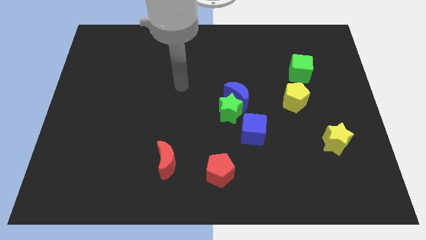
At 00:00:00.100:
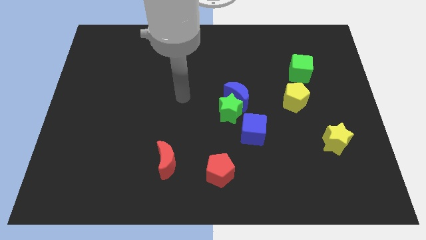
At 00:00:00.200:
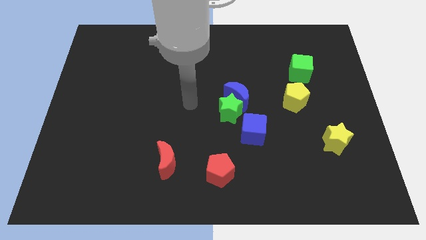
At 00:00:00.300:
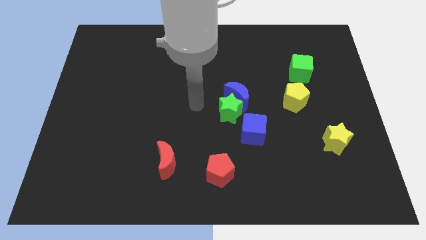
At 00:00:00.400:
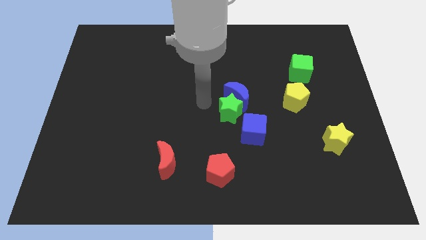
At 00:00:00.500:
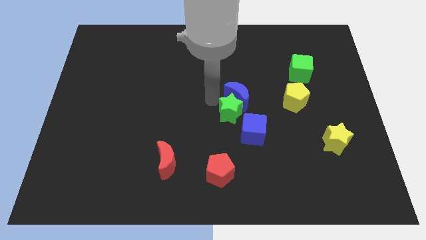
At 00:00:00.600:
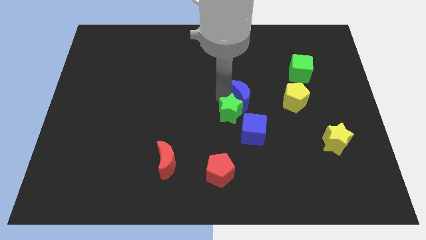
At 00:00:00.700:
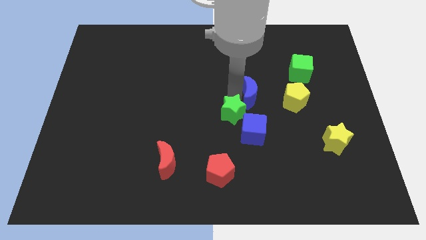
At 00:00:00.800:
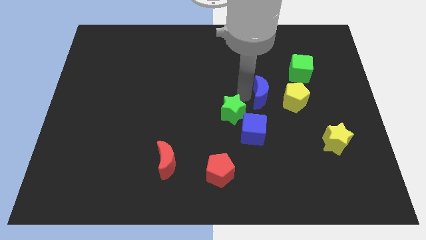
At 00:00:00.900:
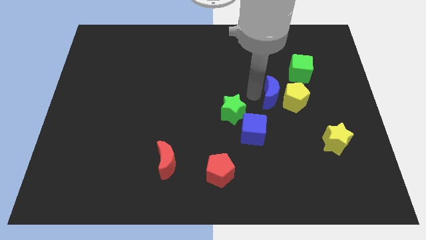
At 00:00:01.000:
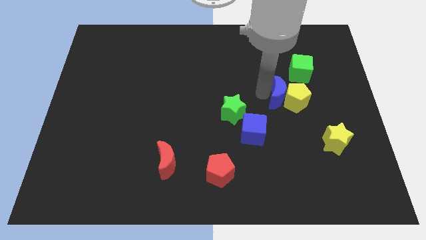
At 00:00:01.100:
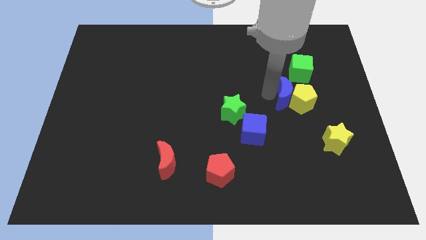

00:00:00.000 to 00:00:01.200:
push the blue moon towards the yellow pentagon

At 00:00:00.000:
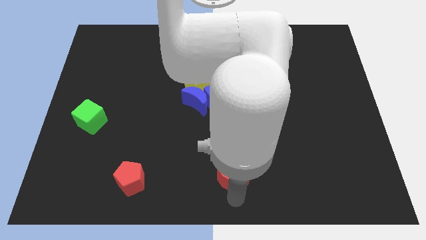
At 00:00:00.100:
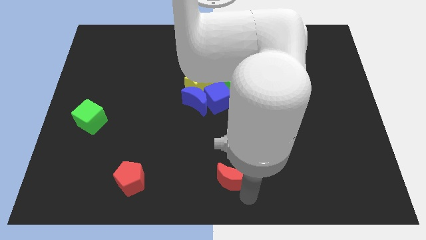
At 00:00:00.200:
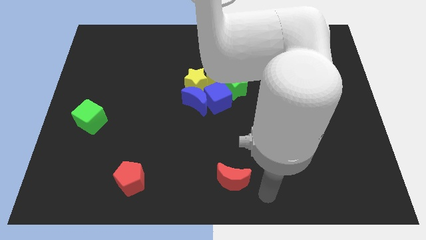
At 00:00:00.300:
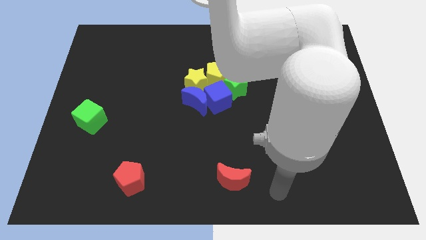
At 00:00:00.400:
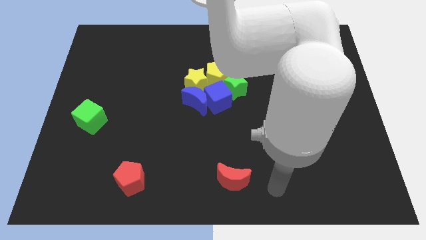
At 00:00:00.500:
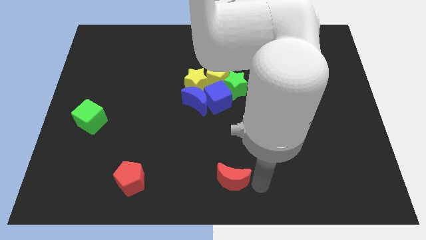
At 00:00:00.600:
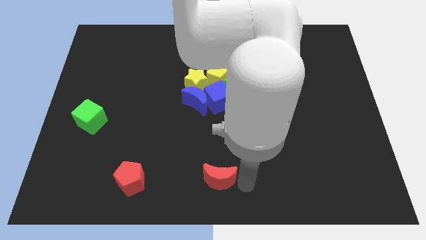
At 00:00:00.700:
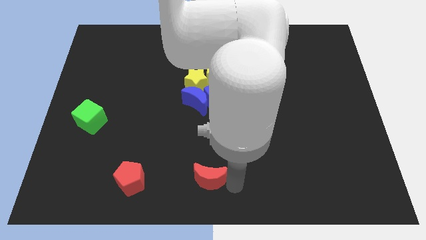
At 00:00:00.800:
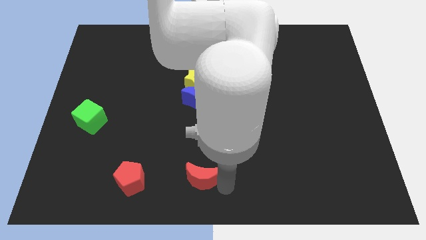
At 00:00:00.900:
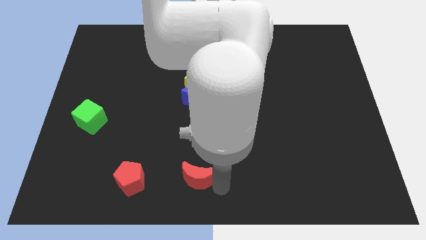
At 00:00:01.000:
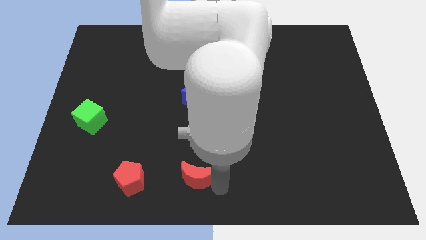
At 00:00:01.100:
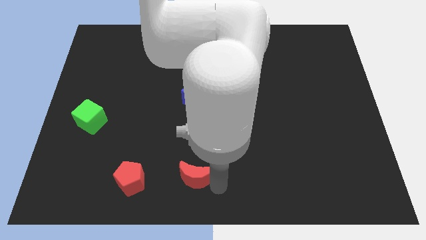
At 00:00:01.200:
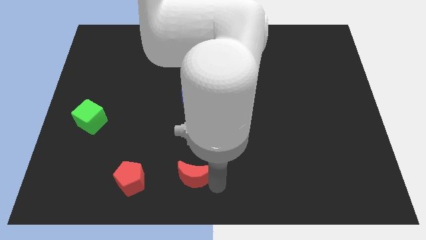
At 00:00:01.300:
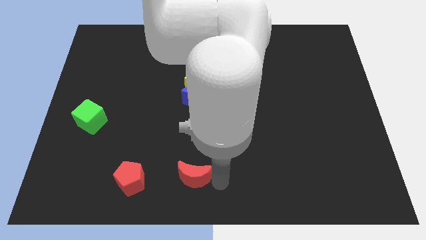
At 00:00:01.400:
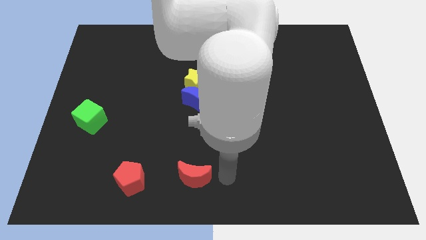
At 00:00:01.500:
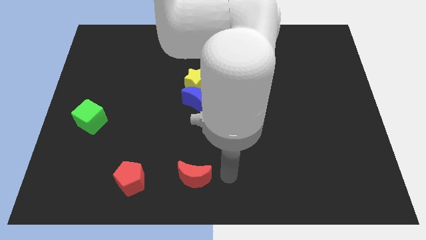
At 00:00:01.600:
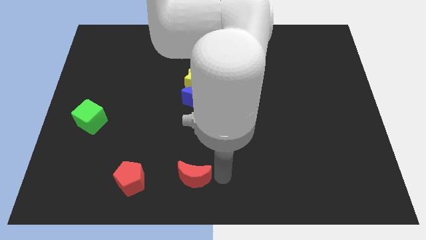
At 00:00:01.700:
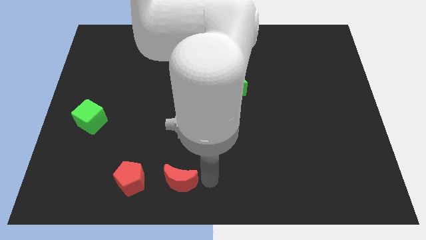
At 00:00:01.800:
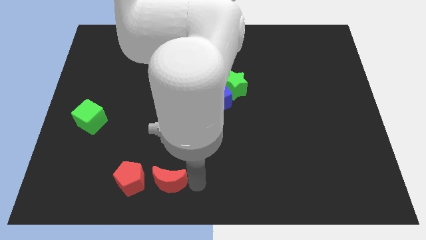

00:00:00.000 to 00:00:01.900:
push the red moon to the right of the red pentagon

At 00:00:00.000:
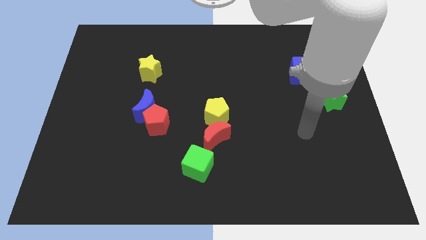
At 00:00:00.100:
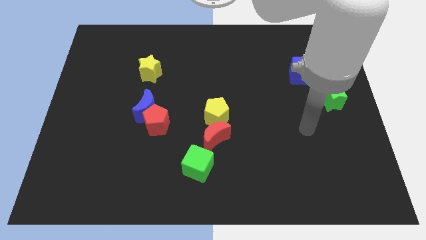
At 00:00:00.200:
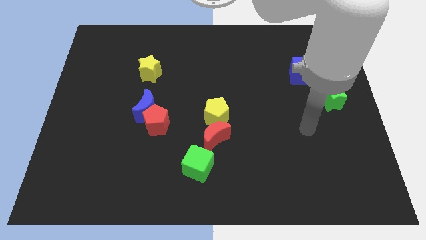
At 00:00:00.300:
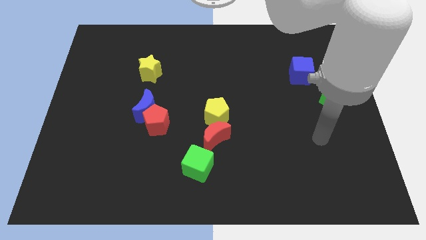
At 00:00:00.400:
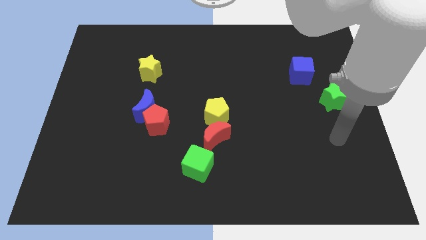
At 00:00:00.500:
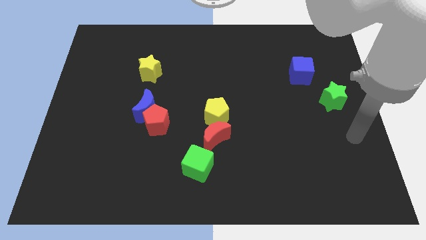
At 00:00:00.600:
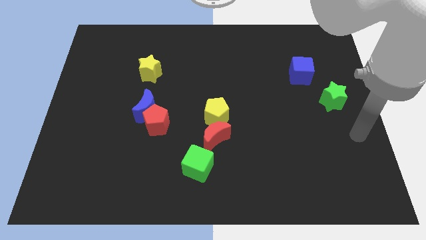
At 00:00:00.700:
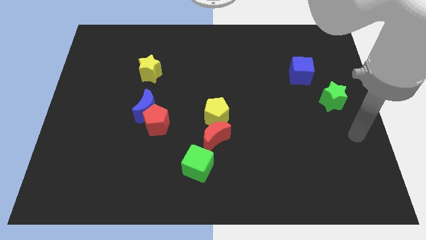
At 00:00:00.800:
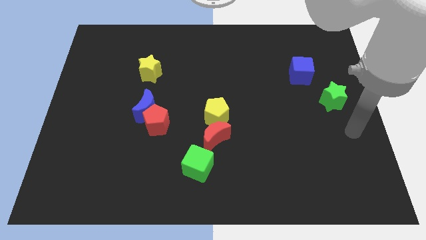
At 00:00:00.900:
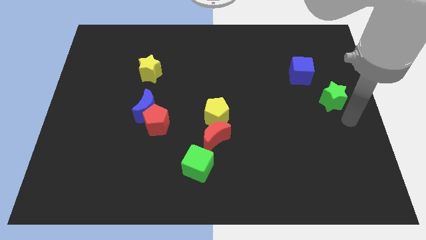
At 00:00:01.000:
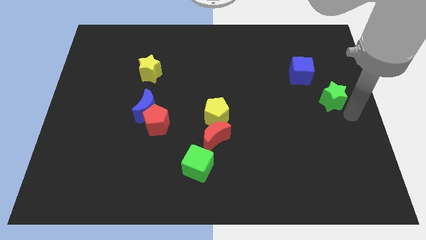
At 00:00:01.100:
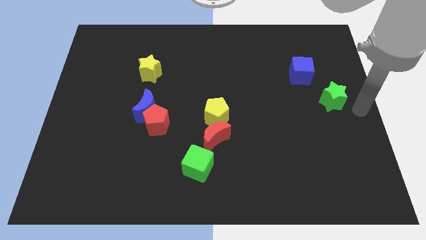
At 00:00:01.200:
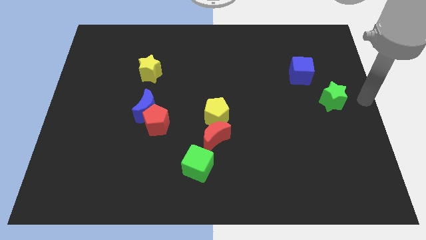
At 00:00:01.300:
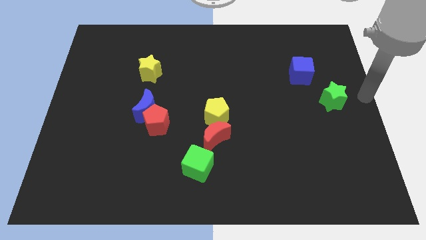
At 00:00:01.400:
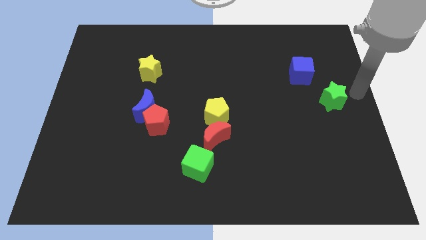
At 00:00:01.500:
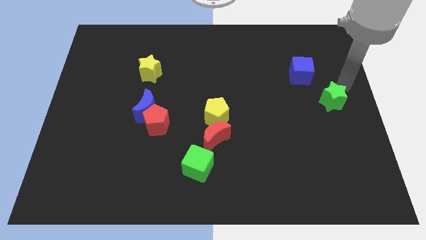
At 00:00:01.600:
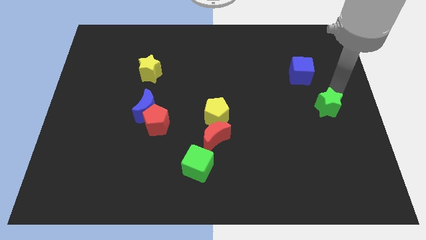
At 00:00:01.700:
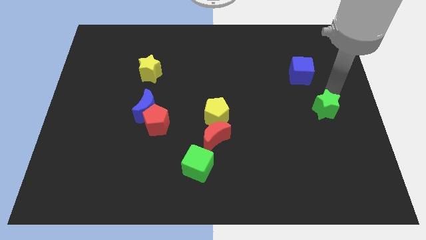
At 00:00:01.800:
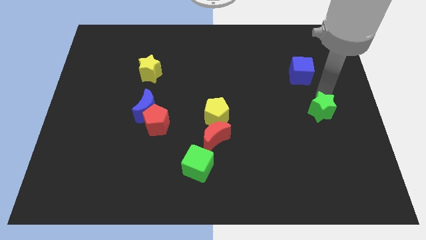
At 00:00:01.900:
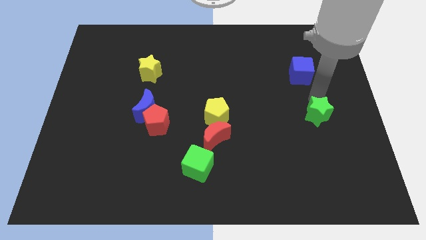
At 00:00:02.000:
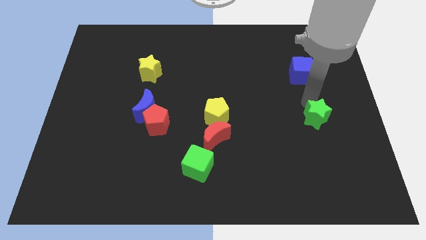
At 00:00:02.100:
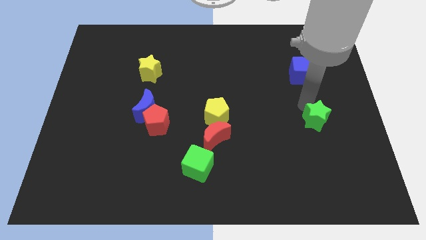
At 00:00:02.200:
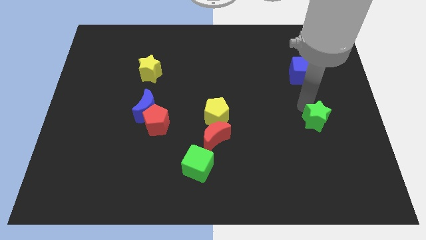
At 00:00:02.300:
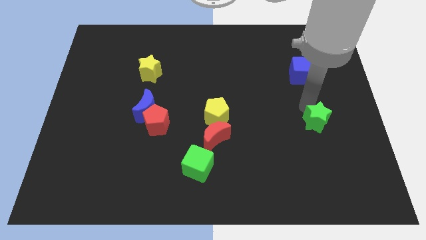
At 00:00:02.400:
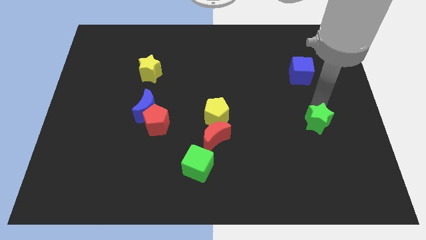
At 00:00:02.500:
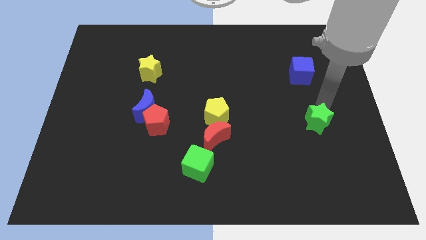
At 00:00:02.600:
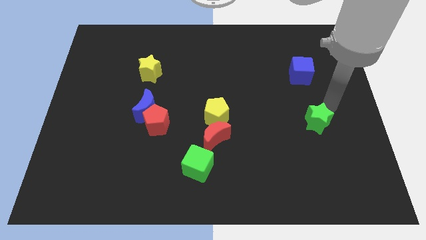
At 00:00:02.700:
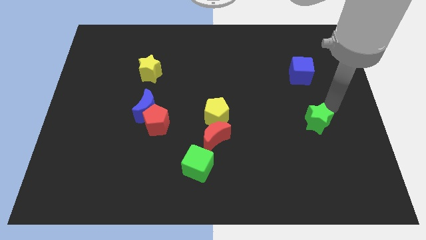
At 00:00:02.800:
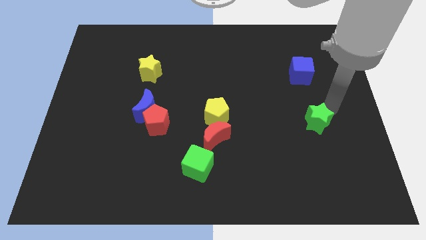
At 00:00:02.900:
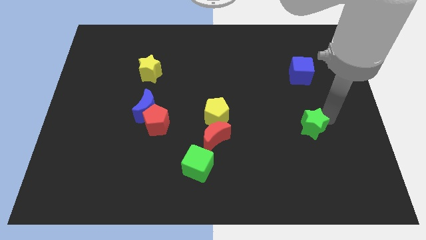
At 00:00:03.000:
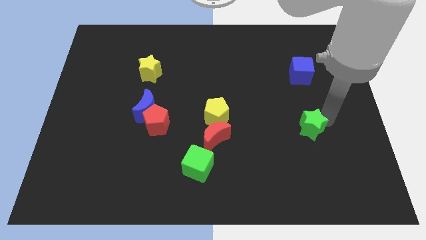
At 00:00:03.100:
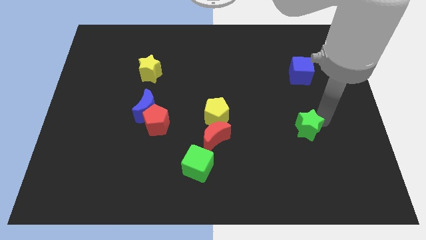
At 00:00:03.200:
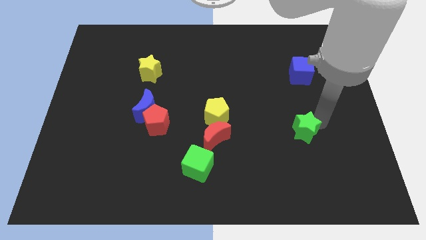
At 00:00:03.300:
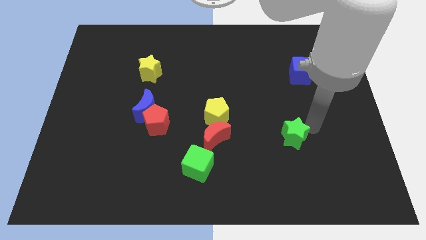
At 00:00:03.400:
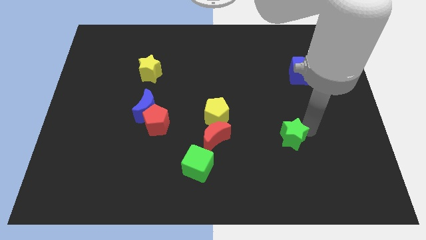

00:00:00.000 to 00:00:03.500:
move the green star parallel to red moon

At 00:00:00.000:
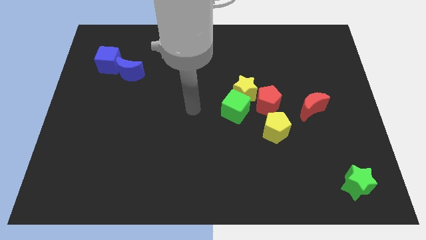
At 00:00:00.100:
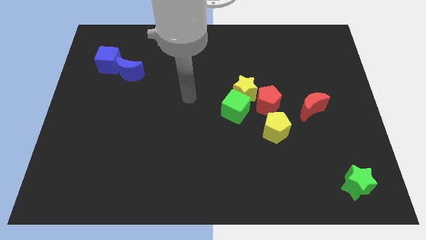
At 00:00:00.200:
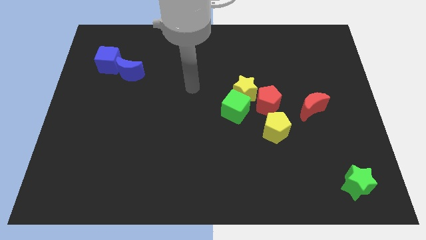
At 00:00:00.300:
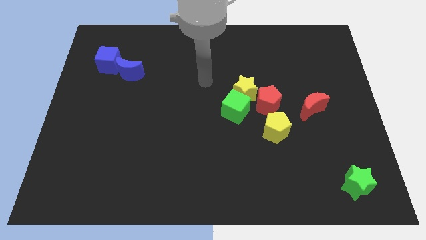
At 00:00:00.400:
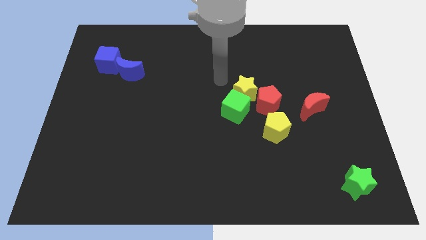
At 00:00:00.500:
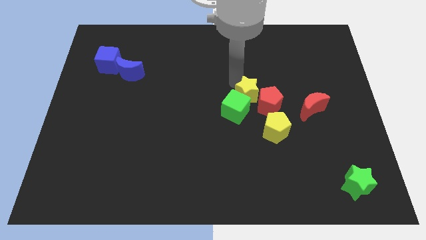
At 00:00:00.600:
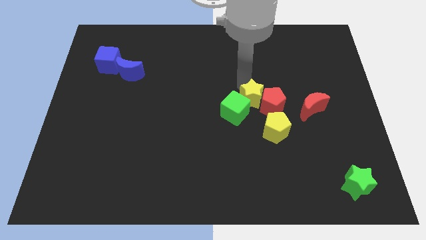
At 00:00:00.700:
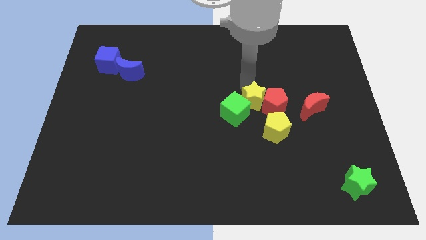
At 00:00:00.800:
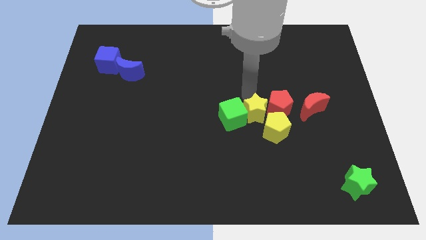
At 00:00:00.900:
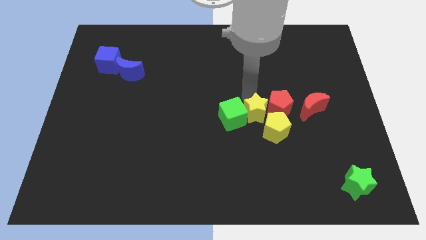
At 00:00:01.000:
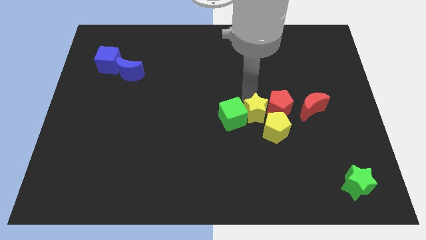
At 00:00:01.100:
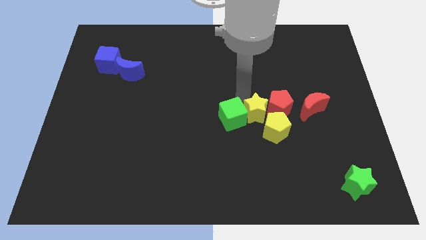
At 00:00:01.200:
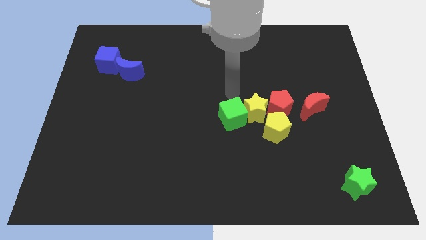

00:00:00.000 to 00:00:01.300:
place the yellow star in between the green cube and red pentagon

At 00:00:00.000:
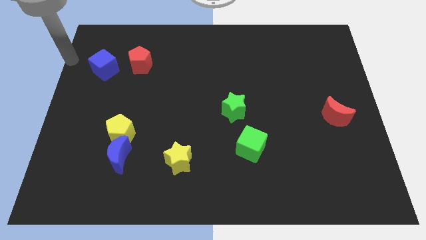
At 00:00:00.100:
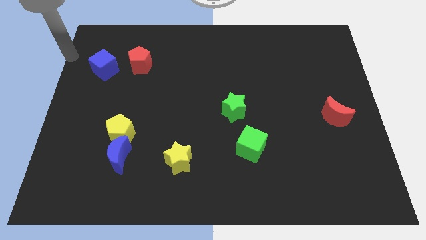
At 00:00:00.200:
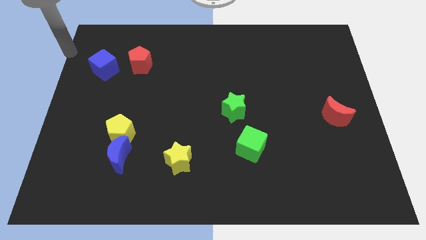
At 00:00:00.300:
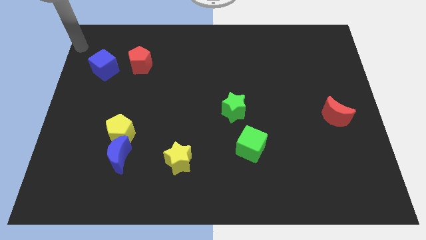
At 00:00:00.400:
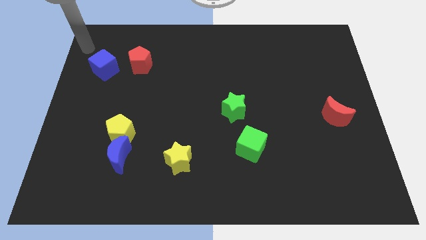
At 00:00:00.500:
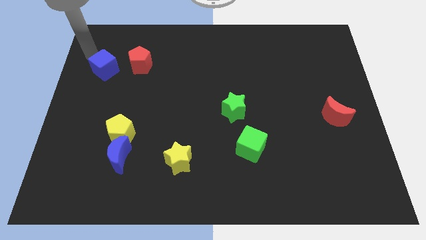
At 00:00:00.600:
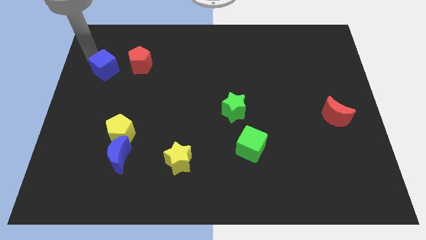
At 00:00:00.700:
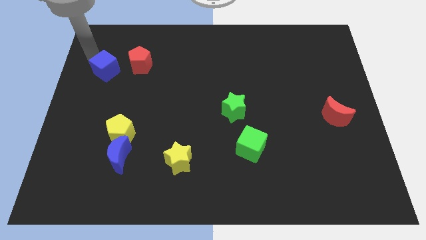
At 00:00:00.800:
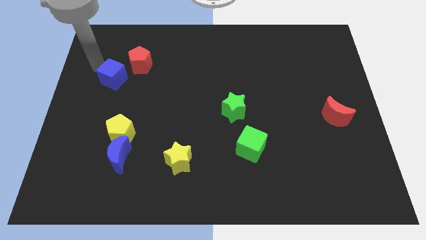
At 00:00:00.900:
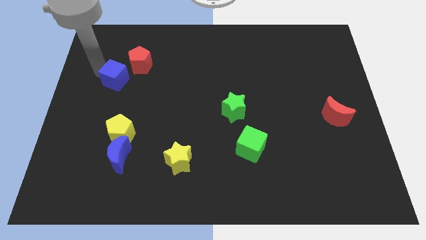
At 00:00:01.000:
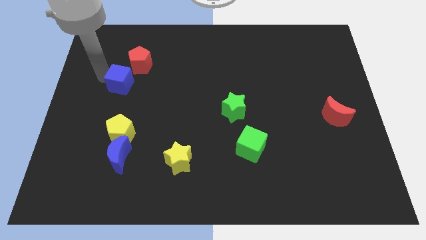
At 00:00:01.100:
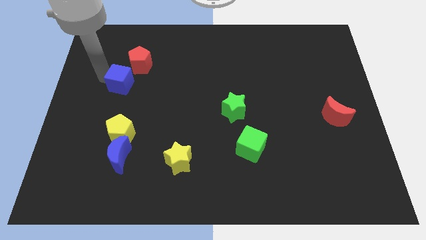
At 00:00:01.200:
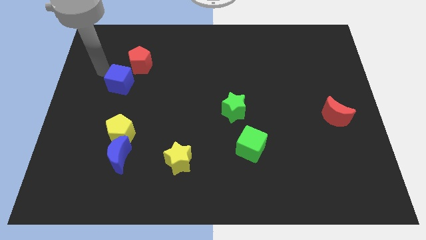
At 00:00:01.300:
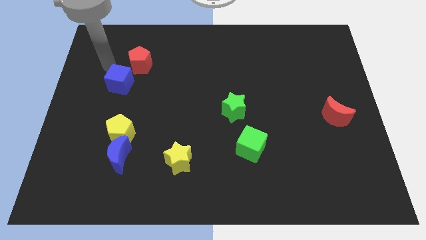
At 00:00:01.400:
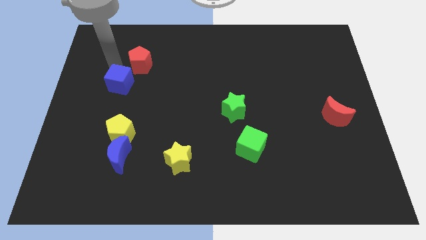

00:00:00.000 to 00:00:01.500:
push the blue cube to the bottom left of the red pentagon
